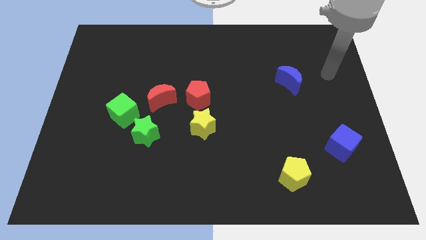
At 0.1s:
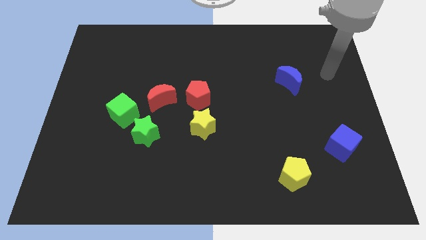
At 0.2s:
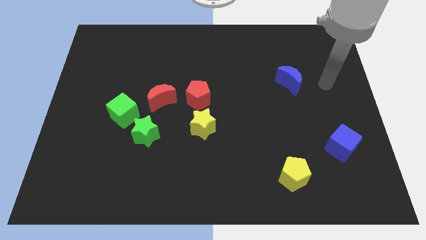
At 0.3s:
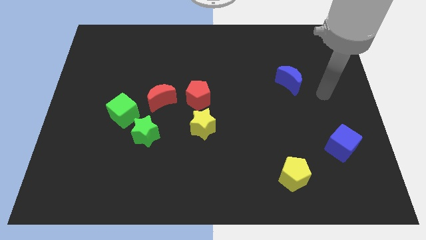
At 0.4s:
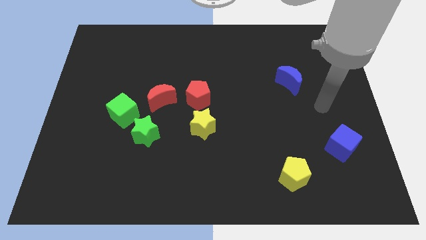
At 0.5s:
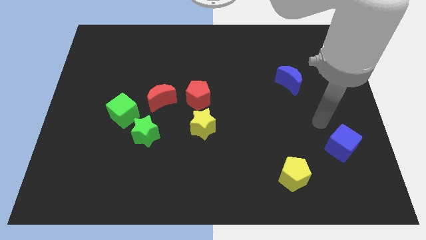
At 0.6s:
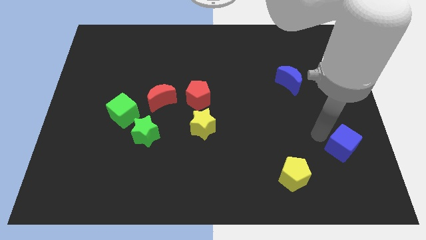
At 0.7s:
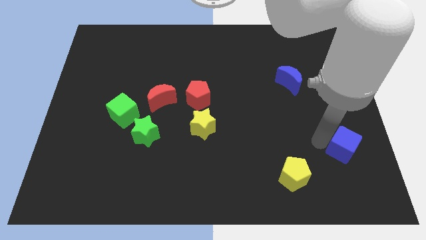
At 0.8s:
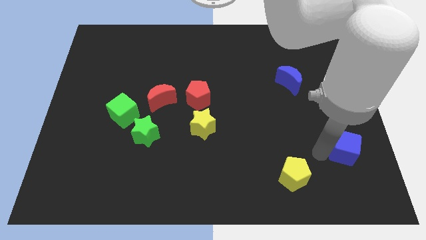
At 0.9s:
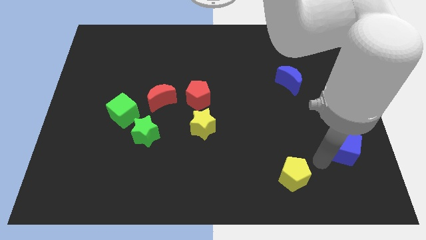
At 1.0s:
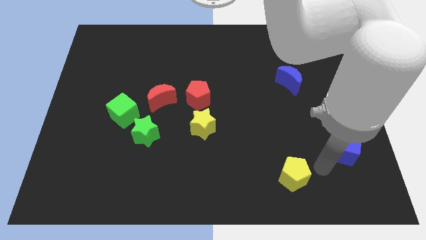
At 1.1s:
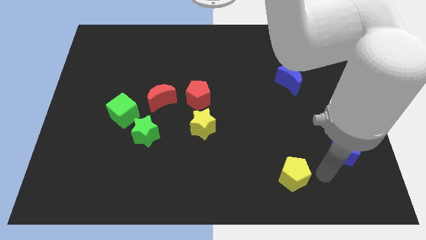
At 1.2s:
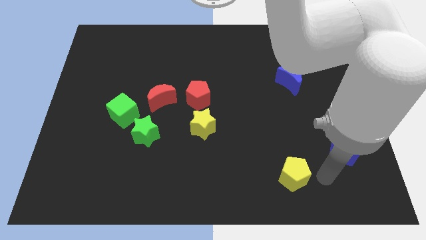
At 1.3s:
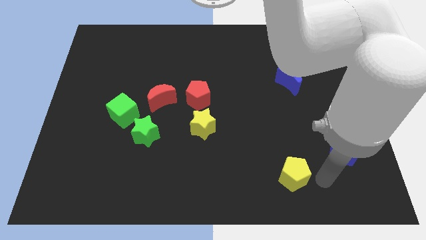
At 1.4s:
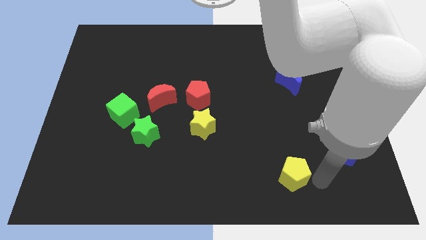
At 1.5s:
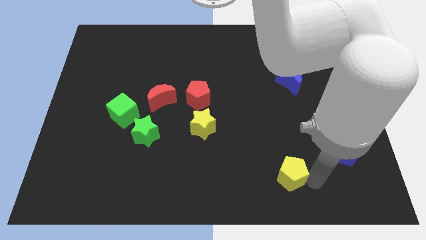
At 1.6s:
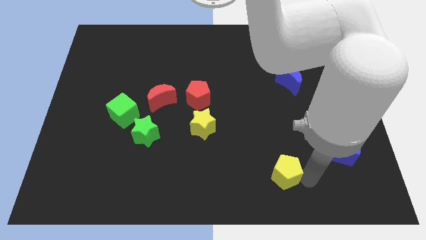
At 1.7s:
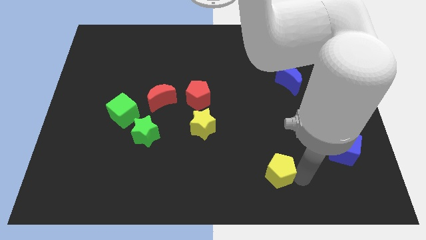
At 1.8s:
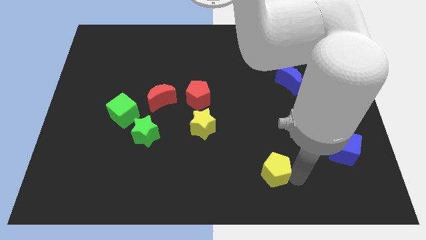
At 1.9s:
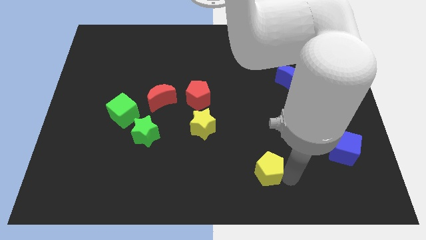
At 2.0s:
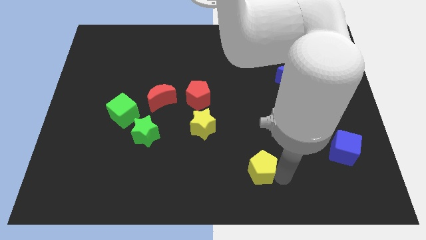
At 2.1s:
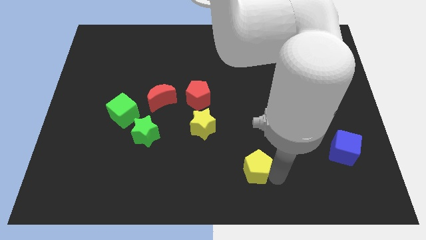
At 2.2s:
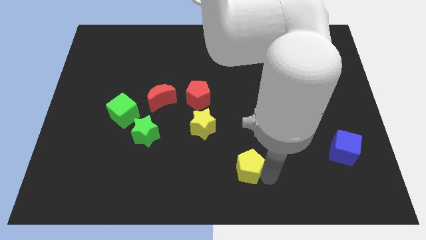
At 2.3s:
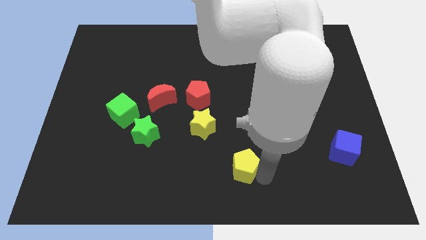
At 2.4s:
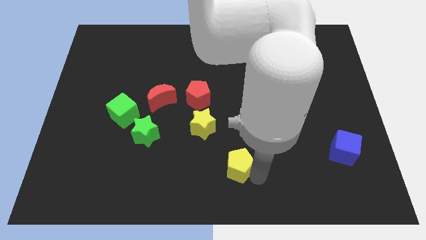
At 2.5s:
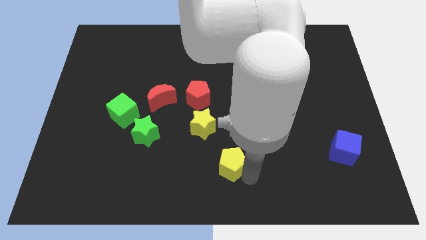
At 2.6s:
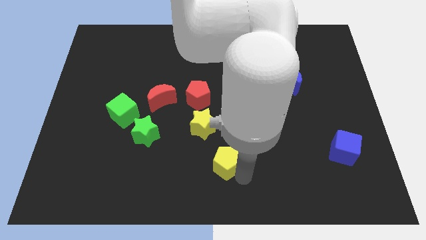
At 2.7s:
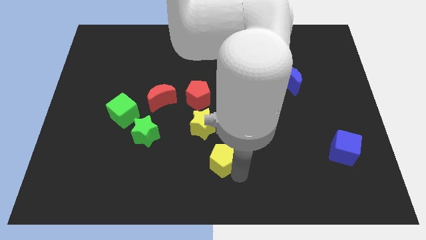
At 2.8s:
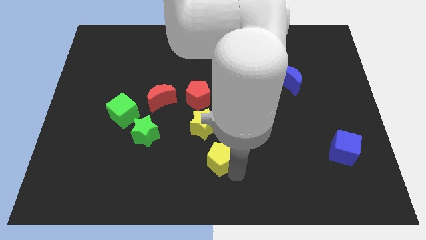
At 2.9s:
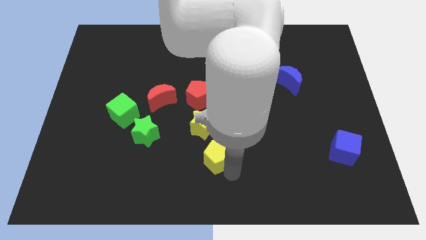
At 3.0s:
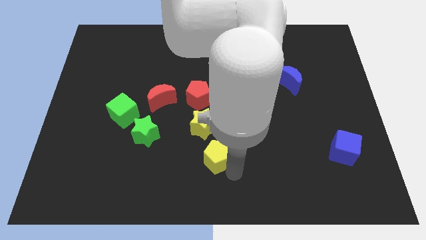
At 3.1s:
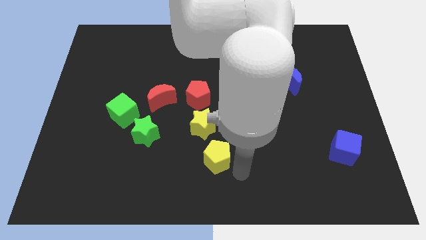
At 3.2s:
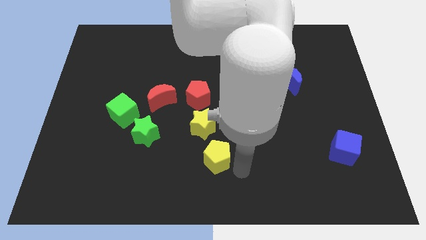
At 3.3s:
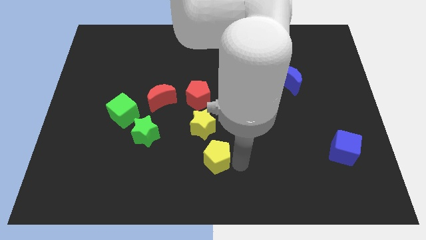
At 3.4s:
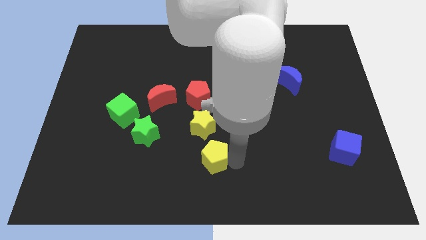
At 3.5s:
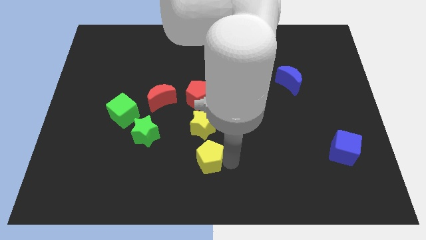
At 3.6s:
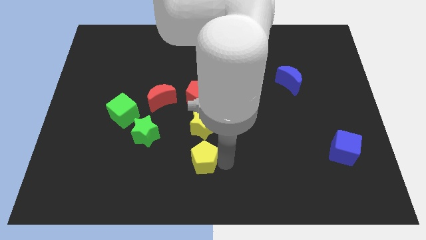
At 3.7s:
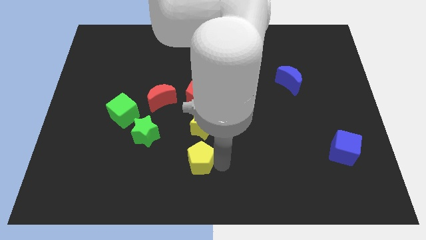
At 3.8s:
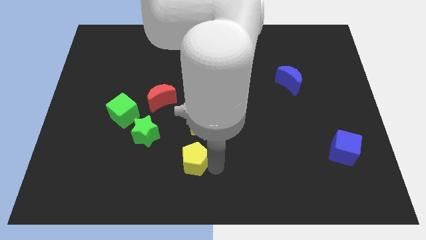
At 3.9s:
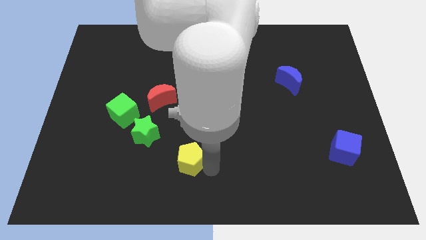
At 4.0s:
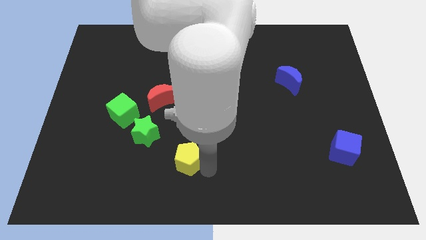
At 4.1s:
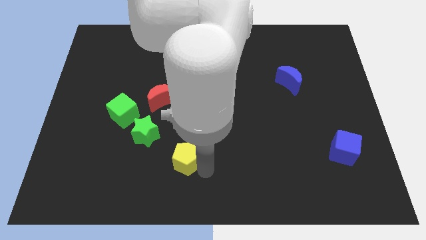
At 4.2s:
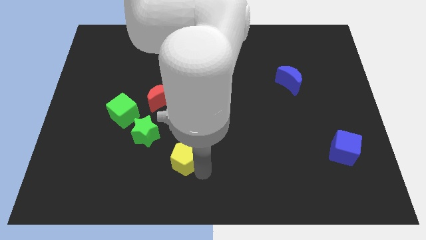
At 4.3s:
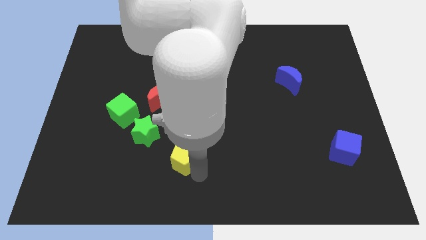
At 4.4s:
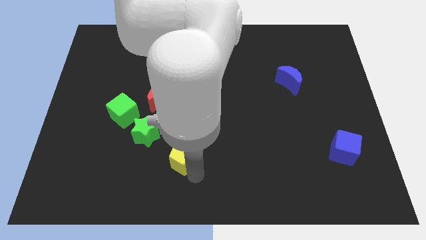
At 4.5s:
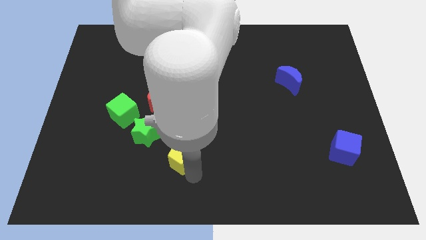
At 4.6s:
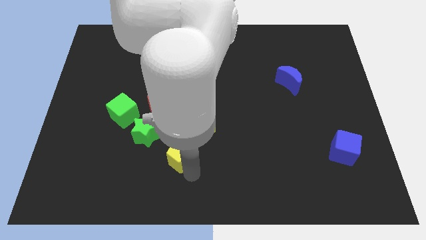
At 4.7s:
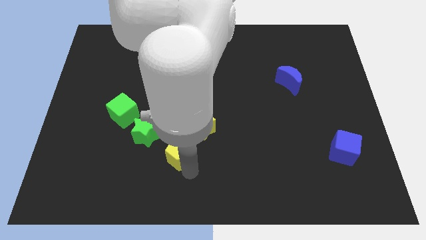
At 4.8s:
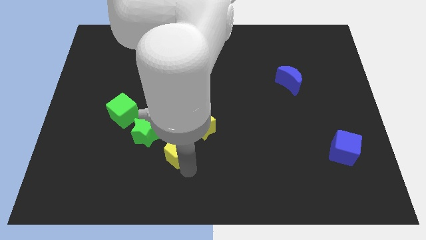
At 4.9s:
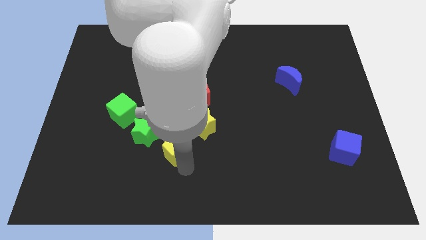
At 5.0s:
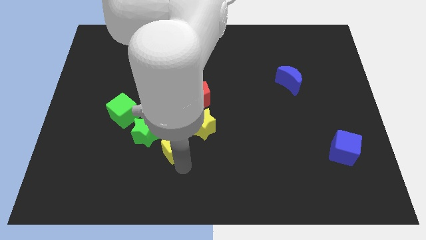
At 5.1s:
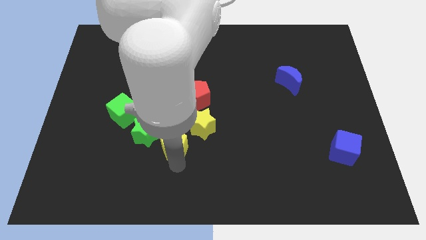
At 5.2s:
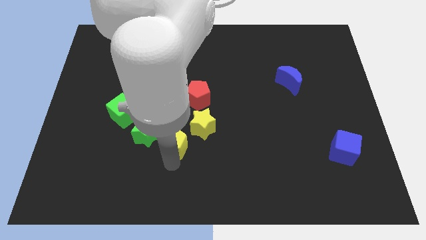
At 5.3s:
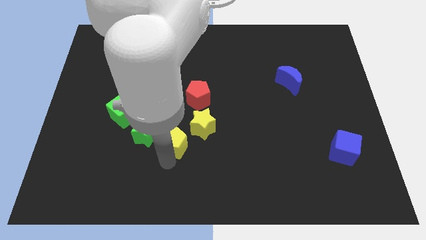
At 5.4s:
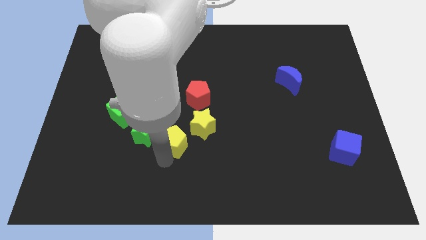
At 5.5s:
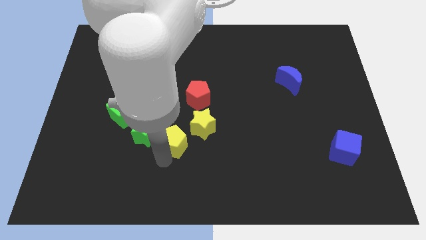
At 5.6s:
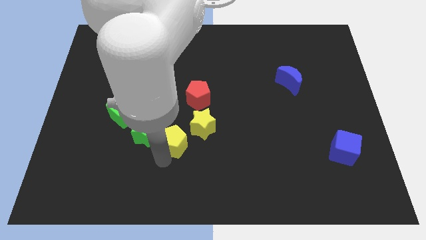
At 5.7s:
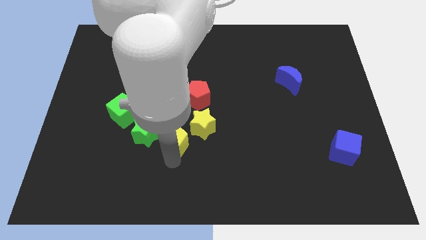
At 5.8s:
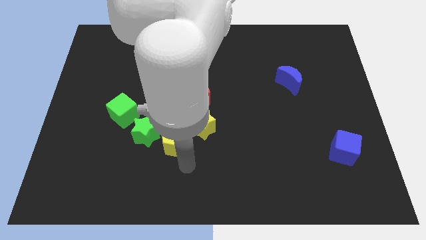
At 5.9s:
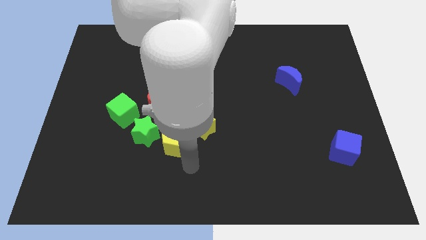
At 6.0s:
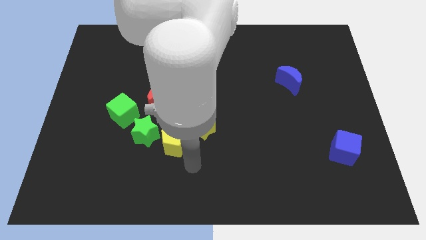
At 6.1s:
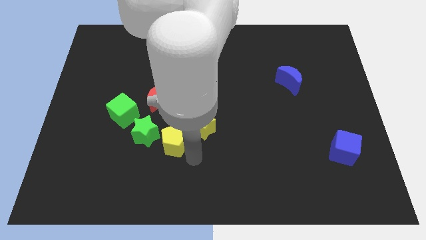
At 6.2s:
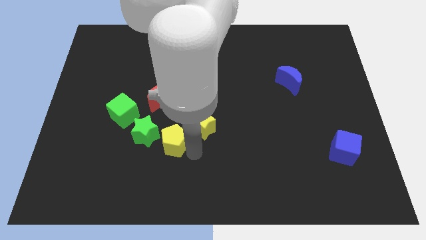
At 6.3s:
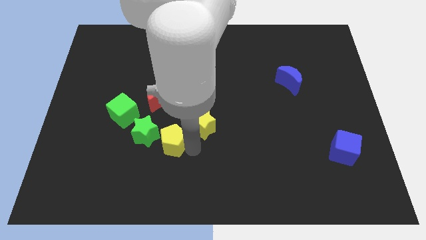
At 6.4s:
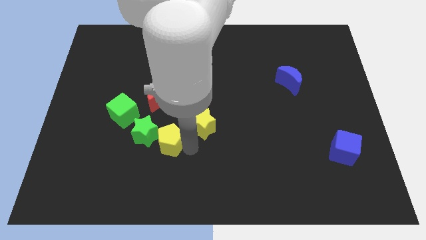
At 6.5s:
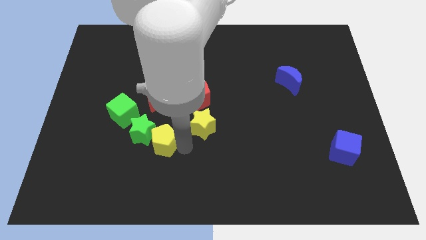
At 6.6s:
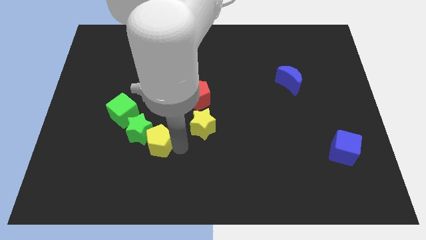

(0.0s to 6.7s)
push the yellow pentagon next to the green star

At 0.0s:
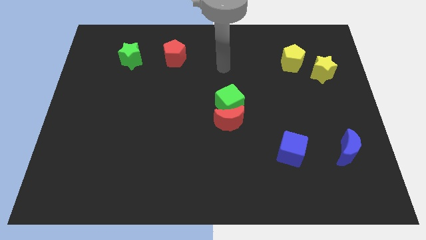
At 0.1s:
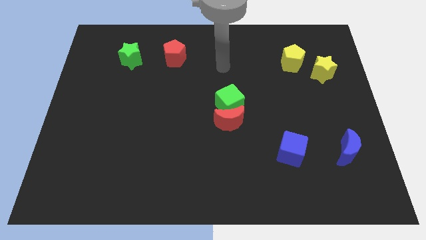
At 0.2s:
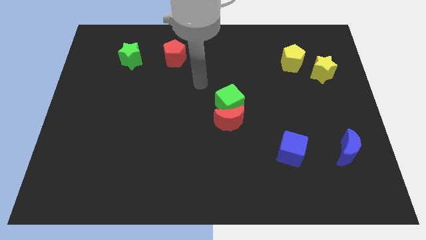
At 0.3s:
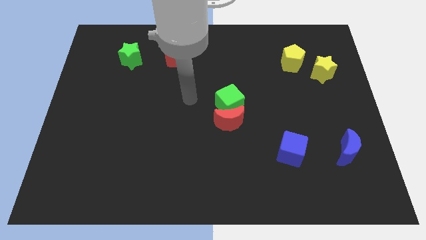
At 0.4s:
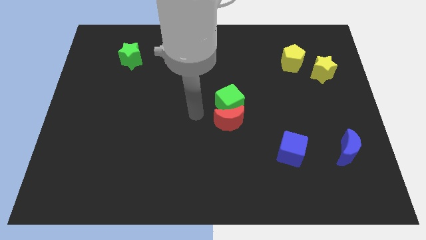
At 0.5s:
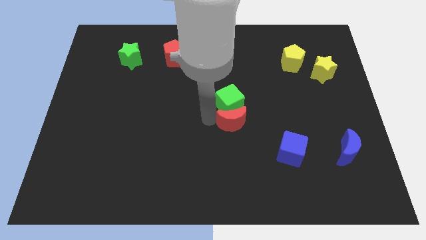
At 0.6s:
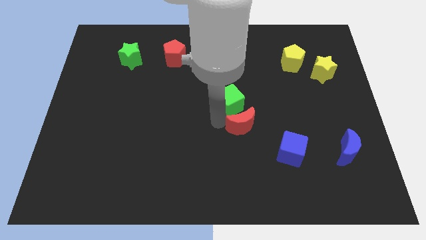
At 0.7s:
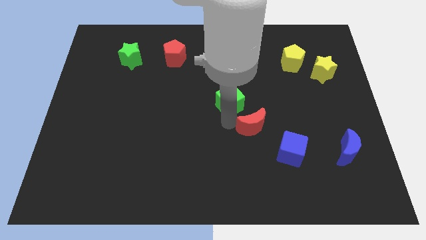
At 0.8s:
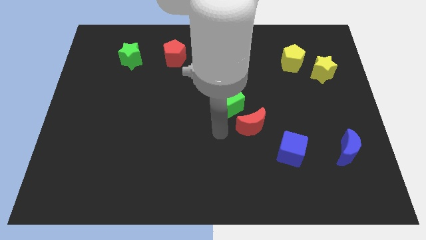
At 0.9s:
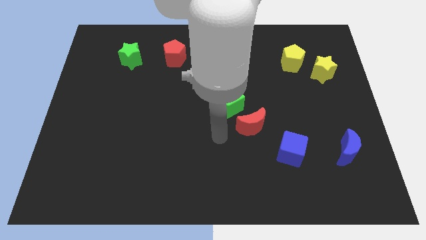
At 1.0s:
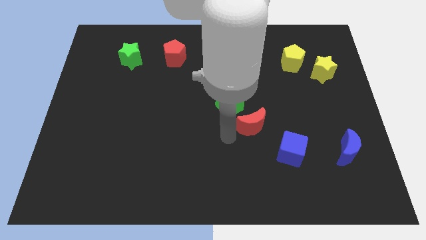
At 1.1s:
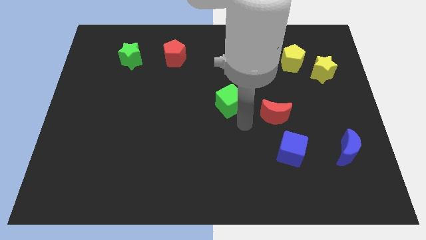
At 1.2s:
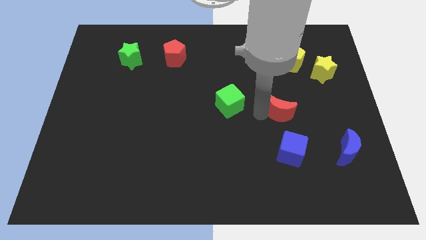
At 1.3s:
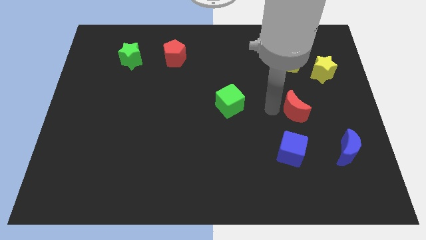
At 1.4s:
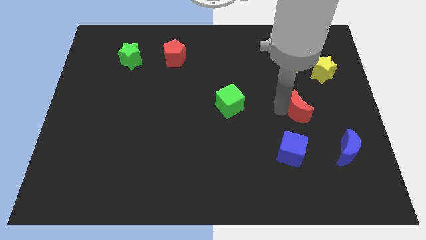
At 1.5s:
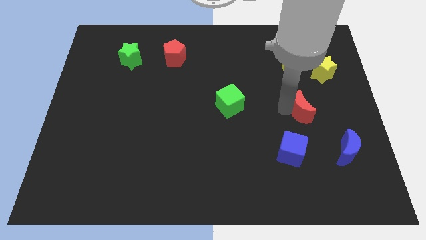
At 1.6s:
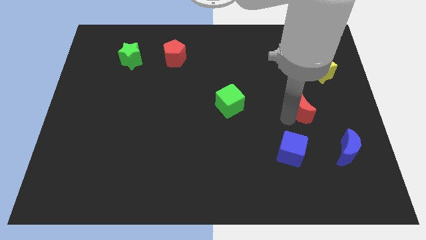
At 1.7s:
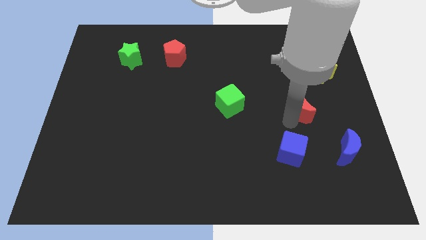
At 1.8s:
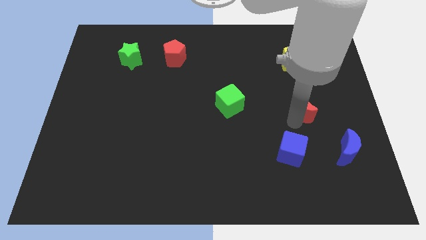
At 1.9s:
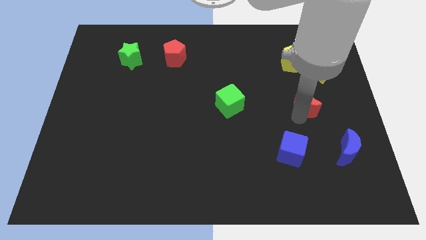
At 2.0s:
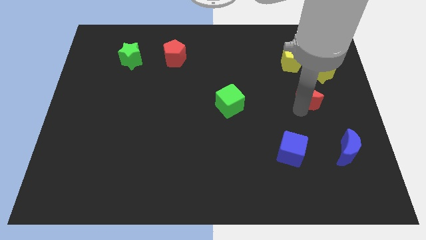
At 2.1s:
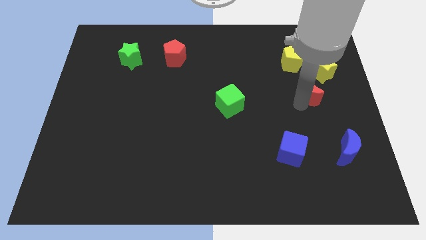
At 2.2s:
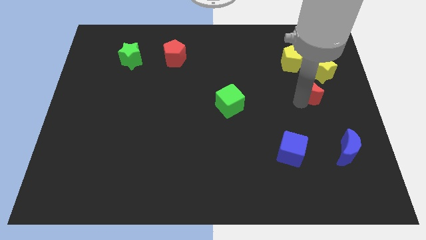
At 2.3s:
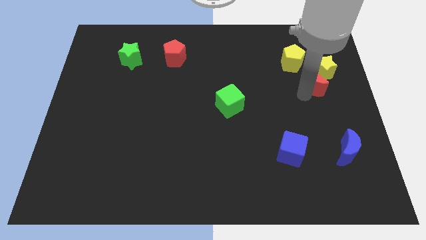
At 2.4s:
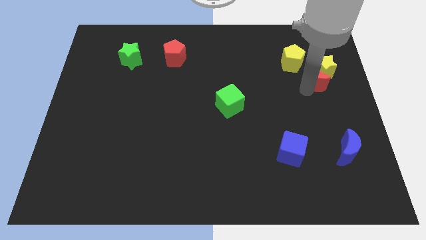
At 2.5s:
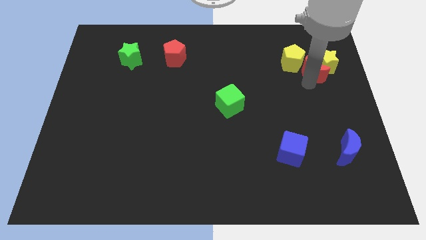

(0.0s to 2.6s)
move the red moon close to the yellow star
